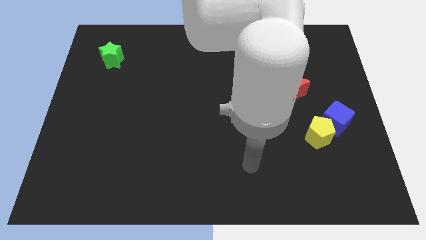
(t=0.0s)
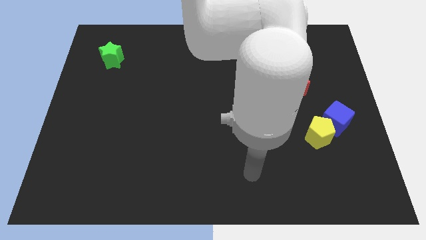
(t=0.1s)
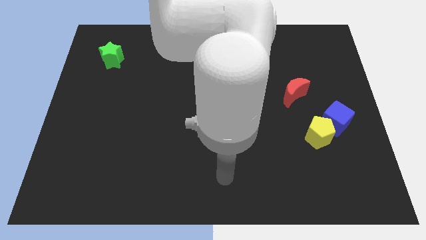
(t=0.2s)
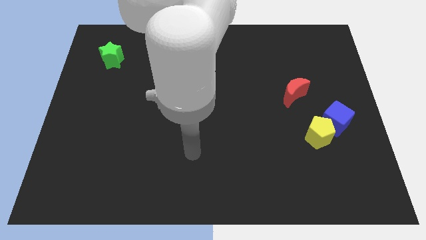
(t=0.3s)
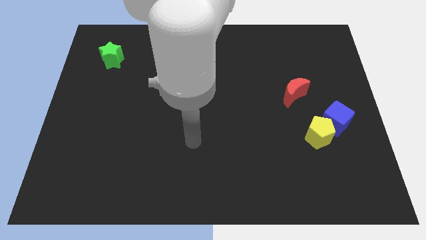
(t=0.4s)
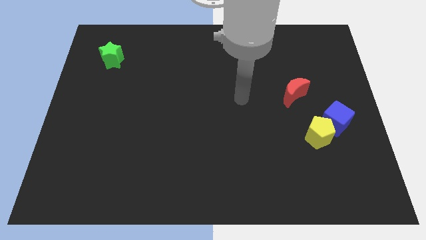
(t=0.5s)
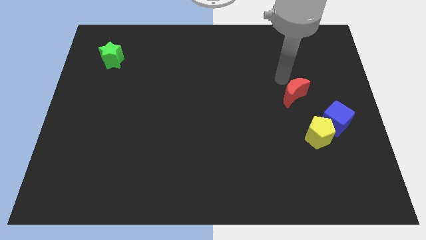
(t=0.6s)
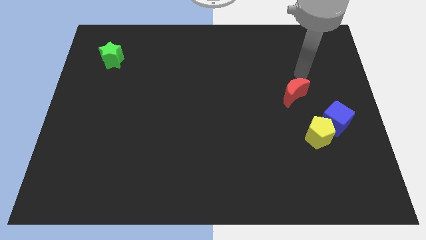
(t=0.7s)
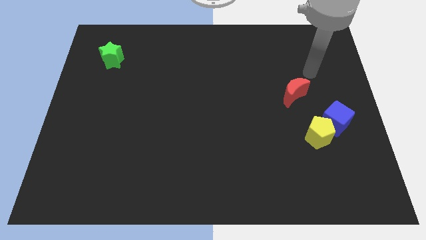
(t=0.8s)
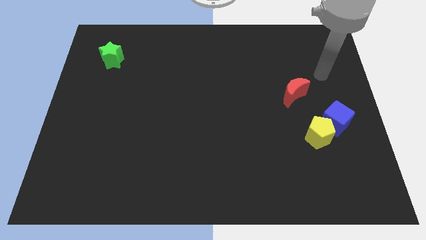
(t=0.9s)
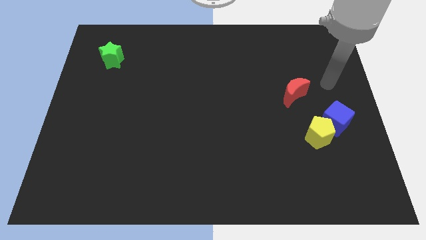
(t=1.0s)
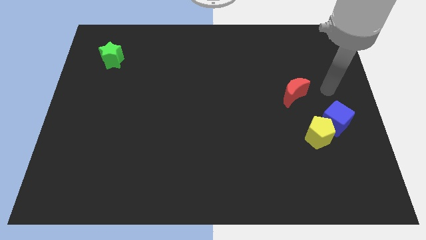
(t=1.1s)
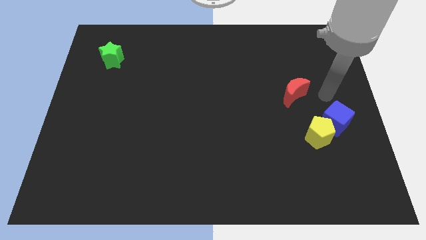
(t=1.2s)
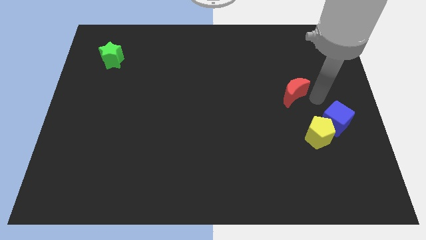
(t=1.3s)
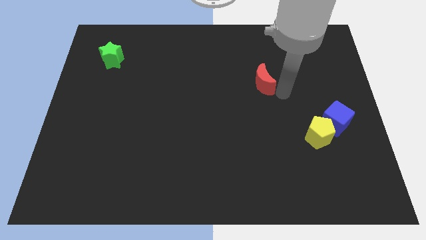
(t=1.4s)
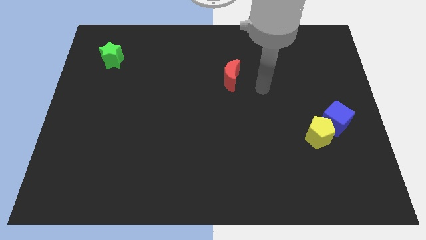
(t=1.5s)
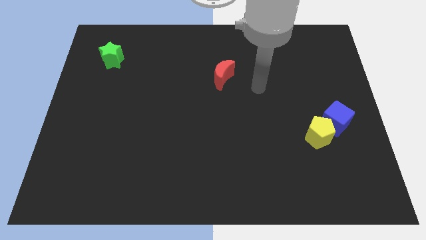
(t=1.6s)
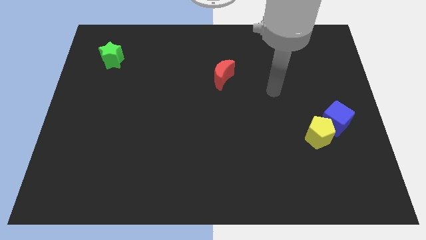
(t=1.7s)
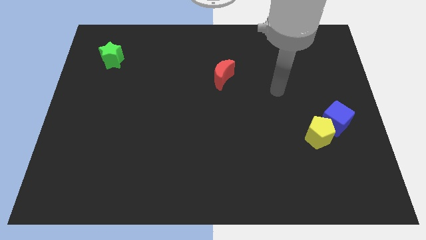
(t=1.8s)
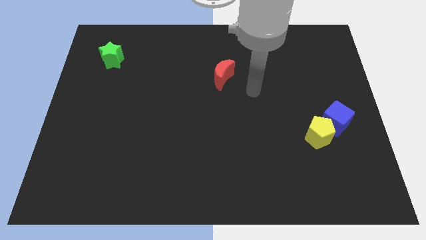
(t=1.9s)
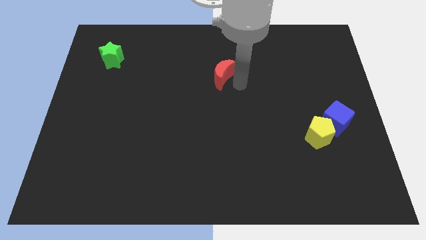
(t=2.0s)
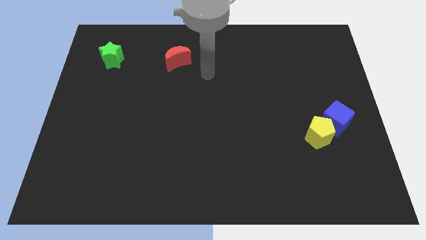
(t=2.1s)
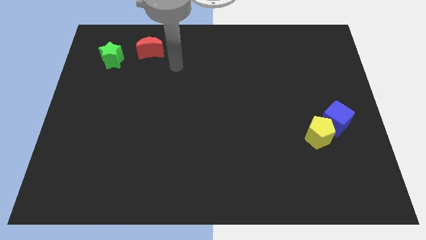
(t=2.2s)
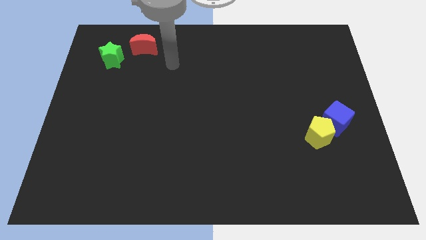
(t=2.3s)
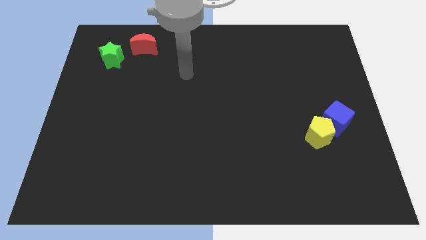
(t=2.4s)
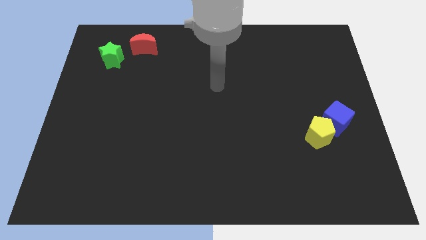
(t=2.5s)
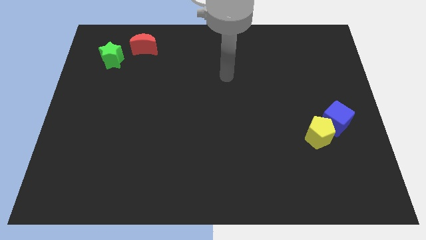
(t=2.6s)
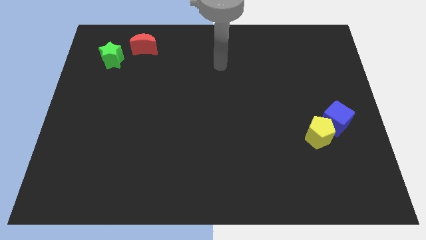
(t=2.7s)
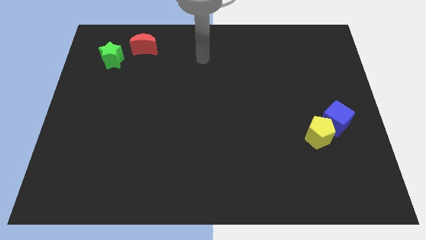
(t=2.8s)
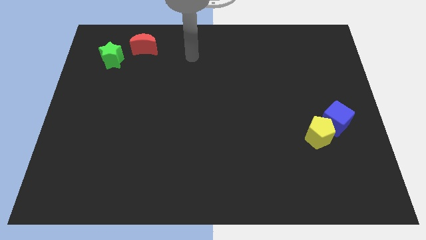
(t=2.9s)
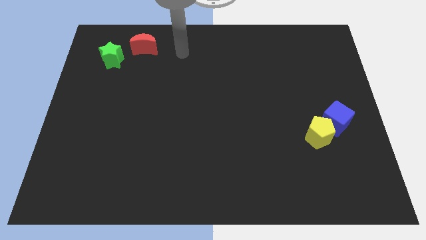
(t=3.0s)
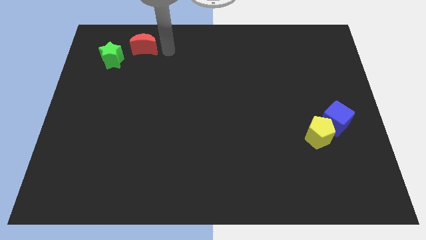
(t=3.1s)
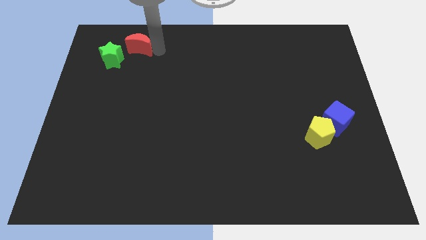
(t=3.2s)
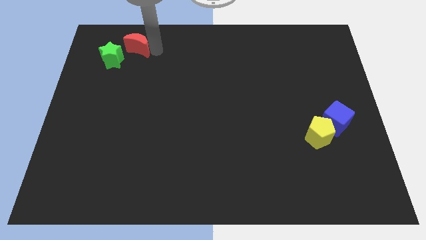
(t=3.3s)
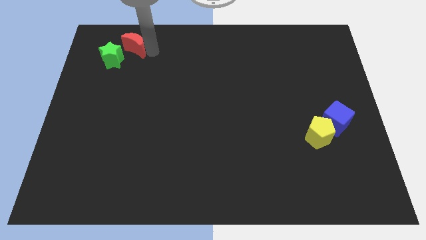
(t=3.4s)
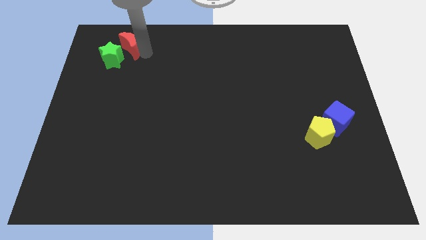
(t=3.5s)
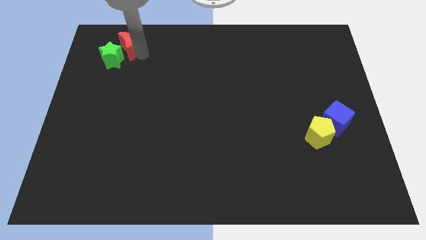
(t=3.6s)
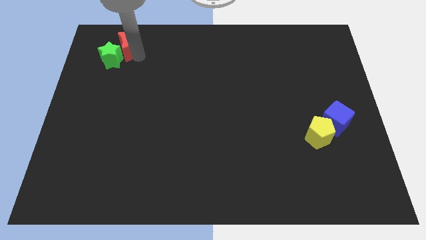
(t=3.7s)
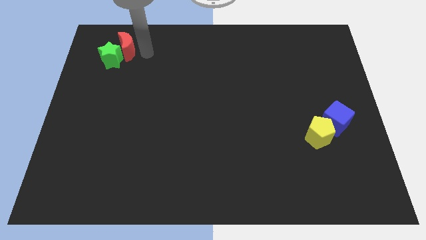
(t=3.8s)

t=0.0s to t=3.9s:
move the moon towards the green star

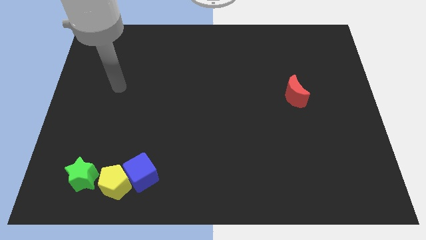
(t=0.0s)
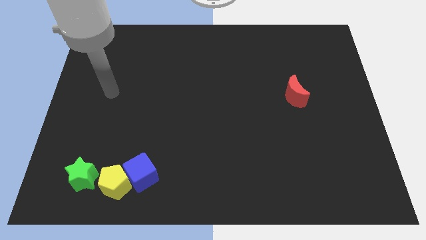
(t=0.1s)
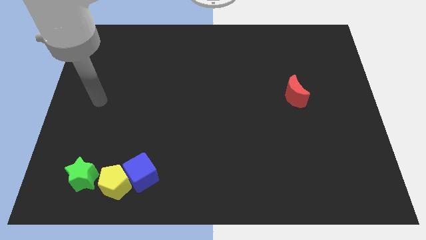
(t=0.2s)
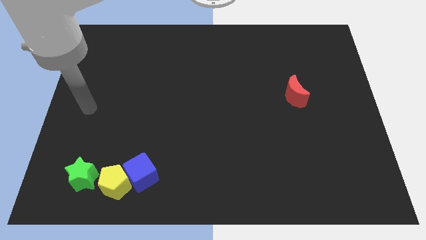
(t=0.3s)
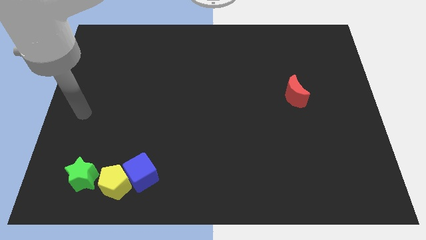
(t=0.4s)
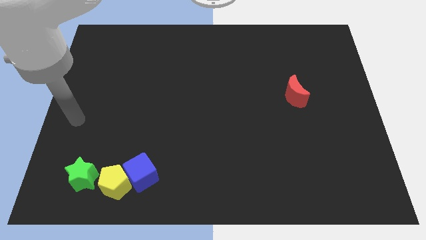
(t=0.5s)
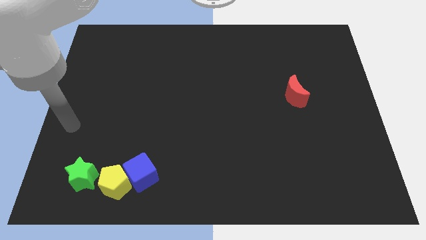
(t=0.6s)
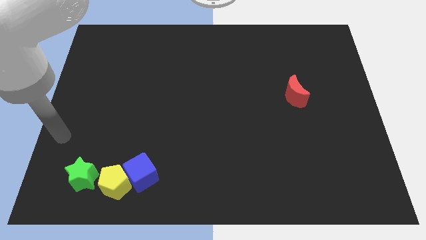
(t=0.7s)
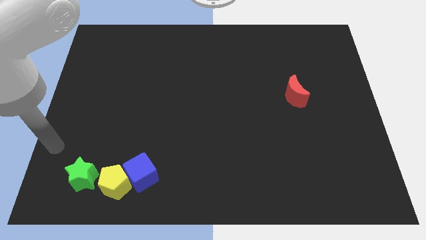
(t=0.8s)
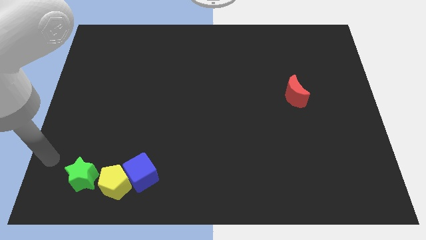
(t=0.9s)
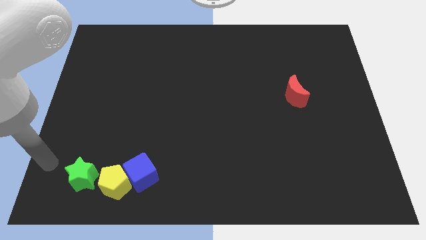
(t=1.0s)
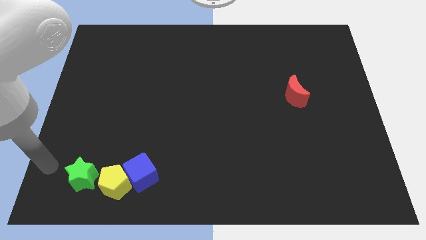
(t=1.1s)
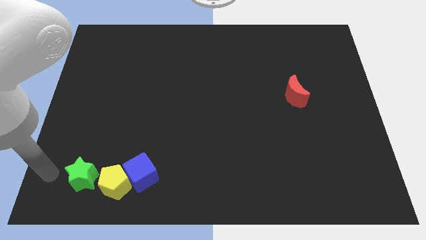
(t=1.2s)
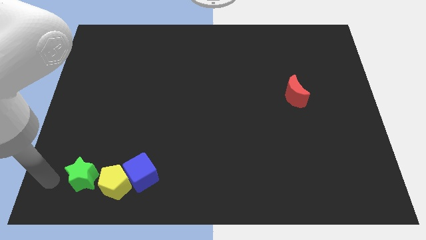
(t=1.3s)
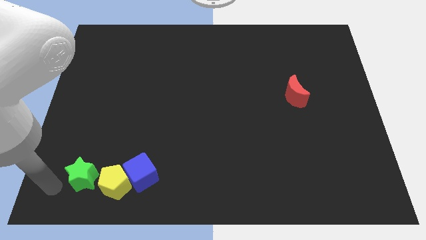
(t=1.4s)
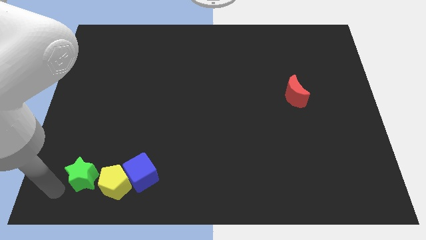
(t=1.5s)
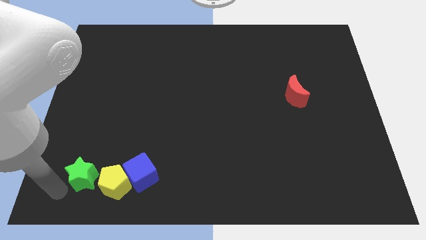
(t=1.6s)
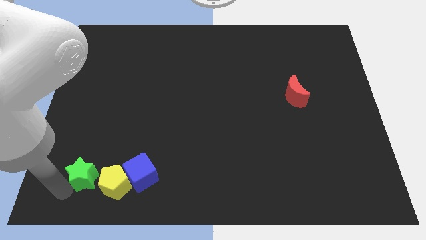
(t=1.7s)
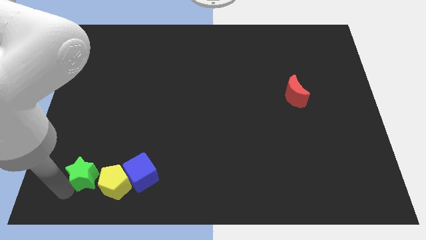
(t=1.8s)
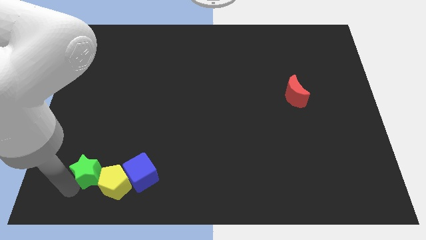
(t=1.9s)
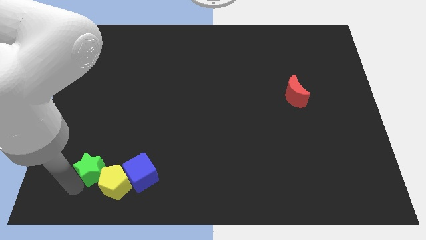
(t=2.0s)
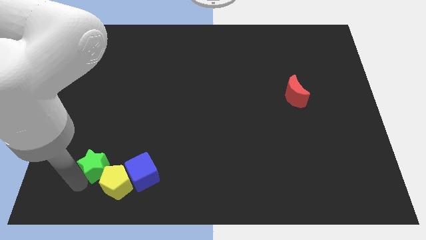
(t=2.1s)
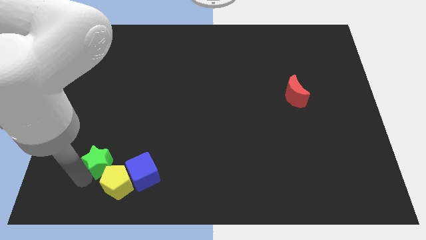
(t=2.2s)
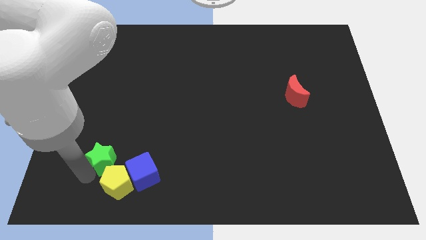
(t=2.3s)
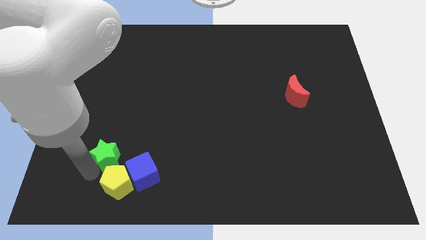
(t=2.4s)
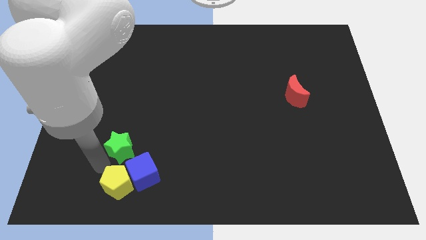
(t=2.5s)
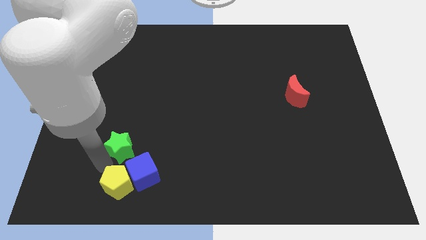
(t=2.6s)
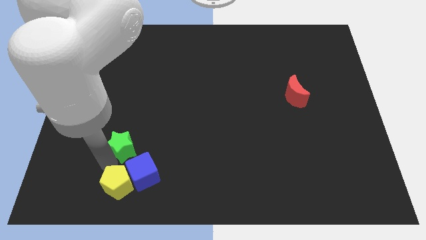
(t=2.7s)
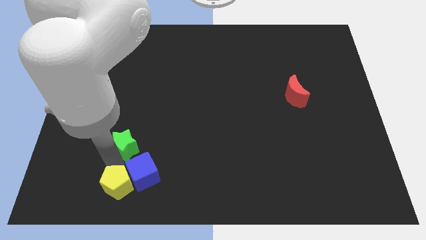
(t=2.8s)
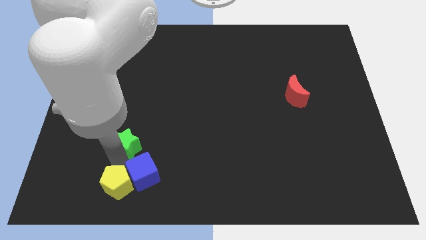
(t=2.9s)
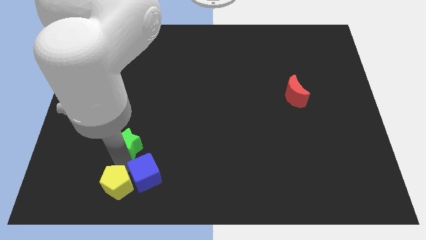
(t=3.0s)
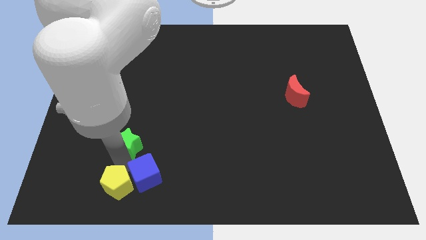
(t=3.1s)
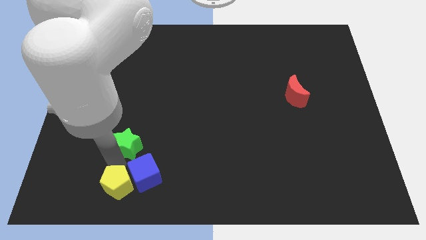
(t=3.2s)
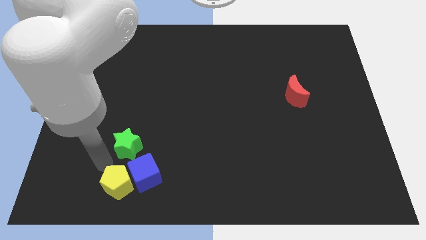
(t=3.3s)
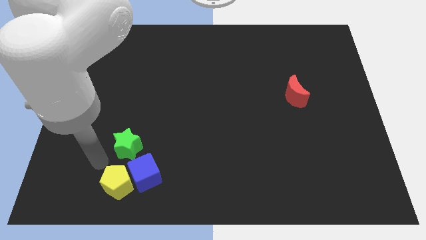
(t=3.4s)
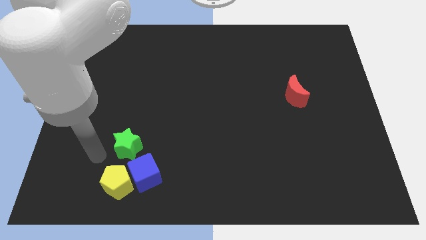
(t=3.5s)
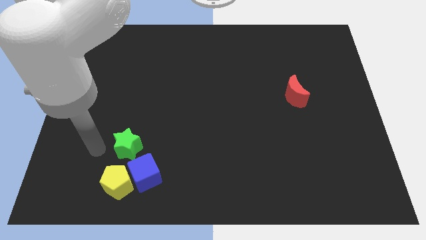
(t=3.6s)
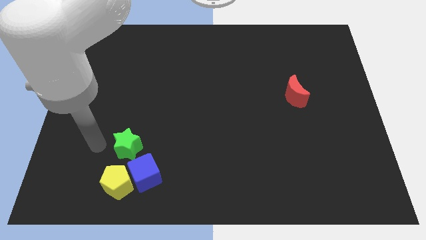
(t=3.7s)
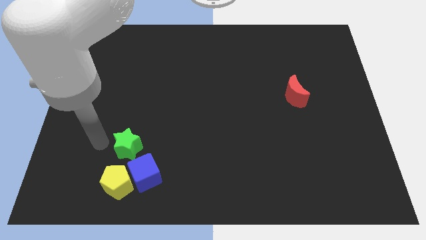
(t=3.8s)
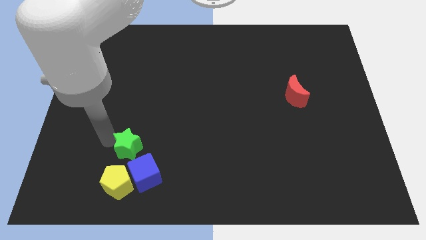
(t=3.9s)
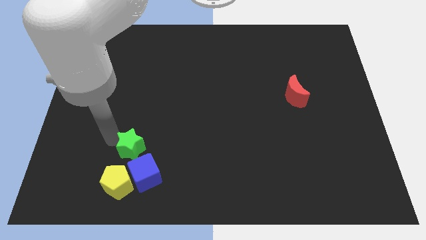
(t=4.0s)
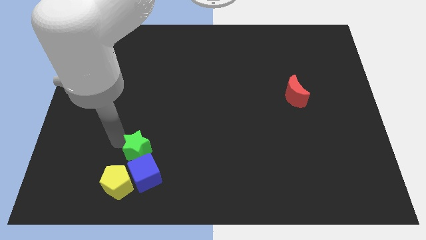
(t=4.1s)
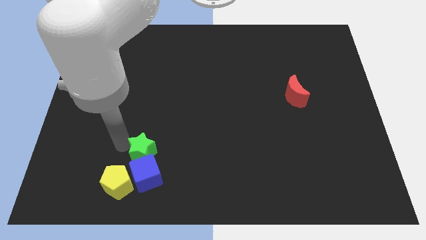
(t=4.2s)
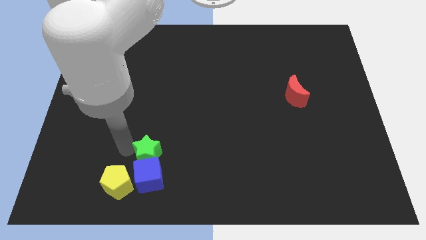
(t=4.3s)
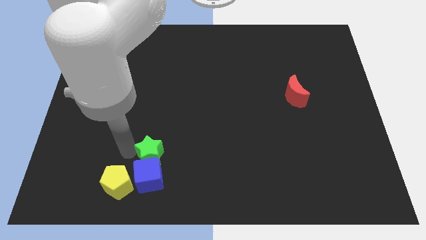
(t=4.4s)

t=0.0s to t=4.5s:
push the green star to the blue block
